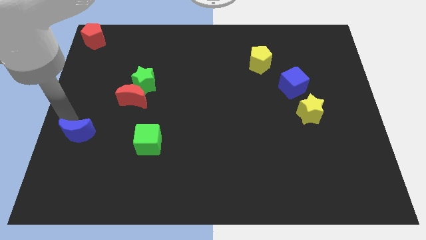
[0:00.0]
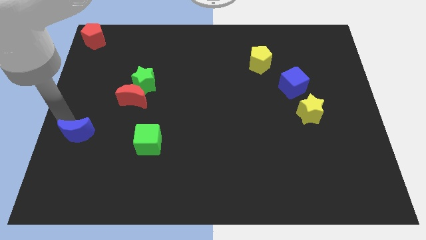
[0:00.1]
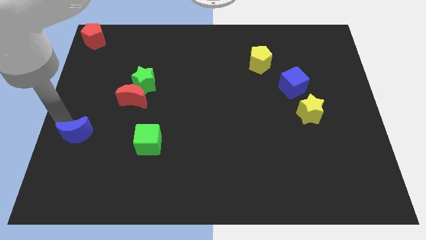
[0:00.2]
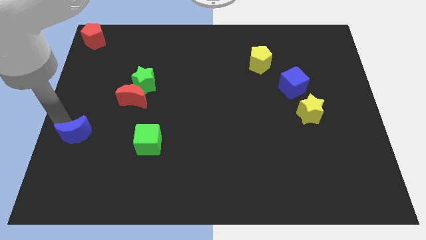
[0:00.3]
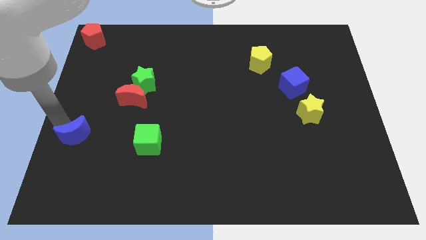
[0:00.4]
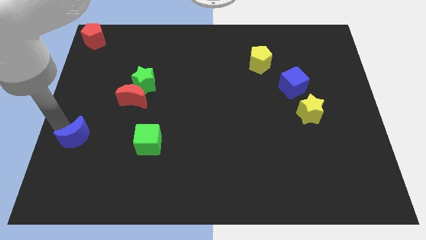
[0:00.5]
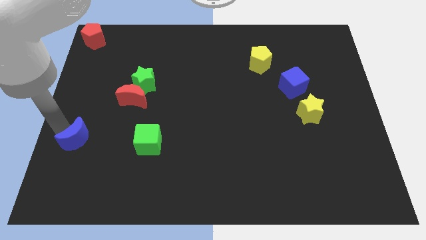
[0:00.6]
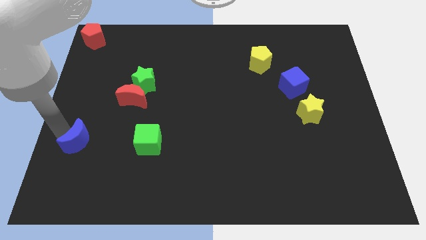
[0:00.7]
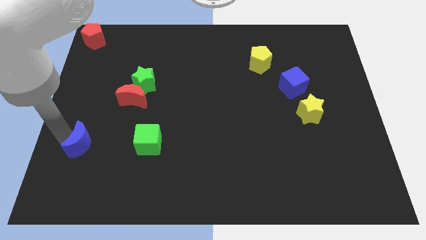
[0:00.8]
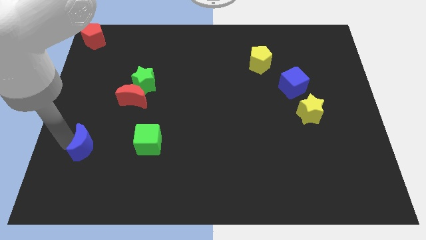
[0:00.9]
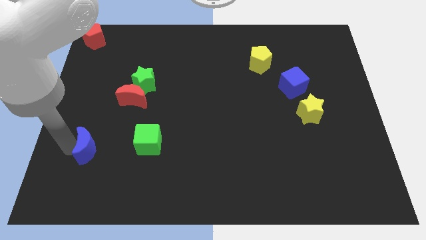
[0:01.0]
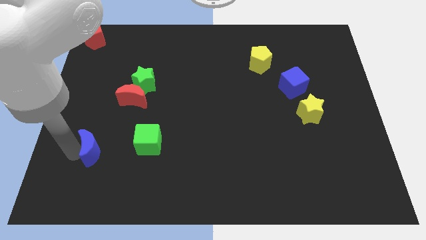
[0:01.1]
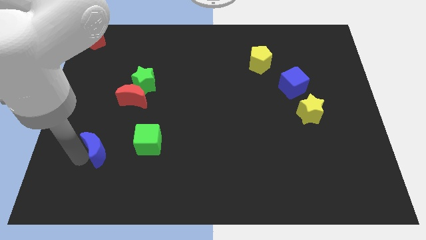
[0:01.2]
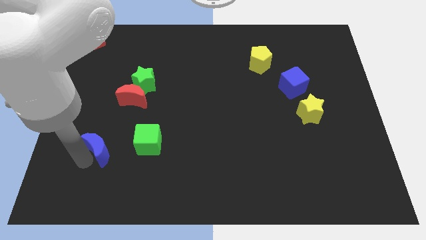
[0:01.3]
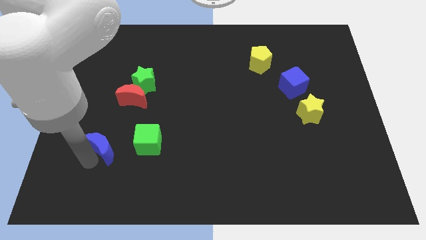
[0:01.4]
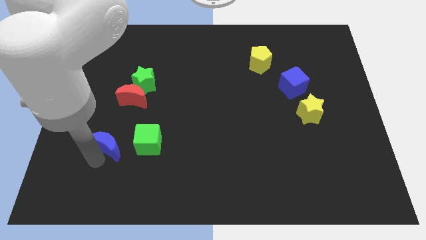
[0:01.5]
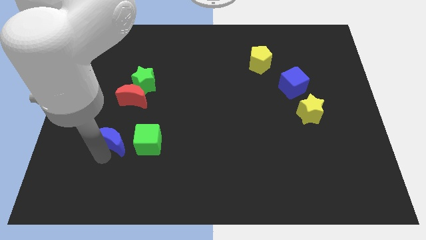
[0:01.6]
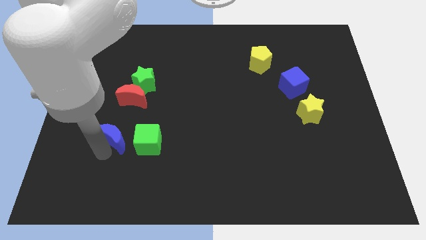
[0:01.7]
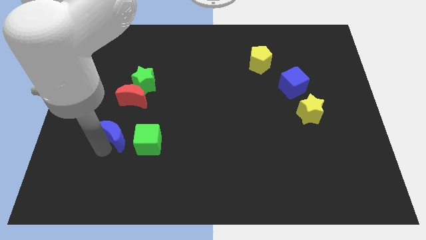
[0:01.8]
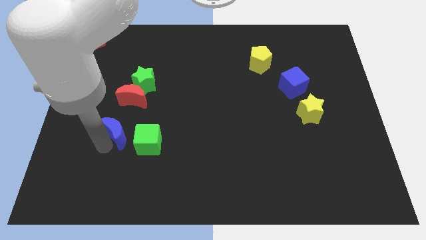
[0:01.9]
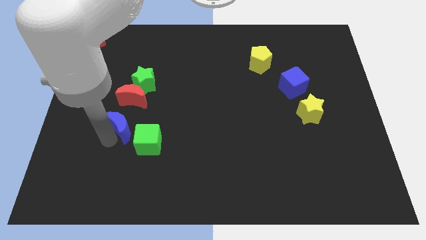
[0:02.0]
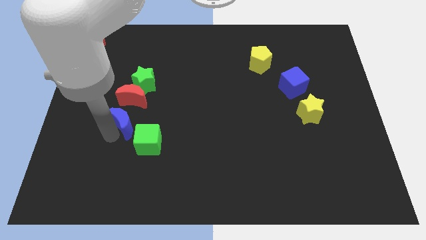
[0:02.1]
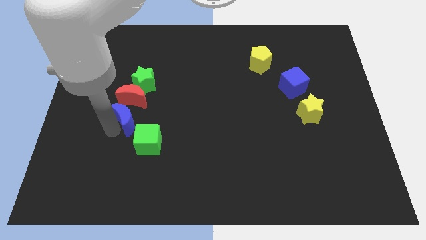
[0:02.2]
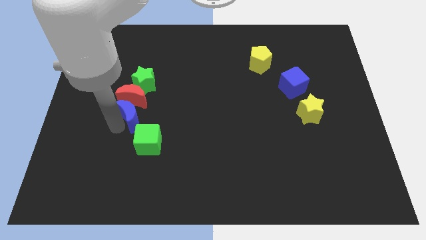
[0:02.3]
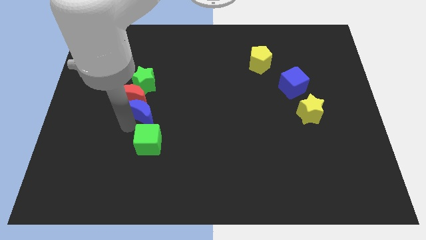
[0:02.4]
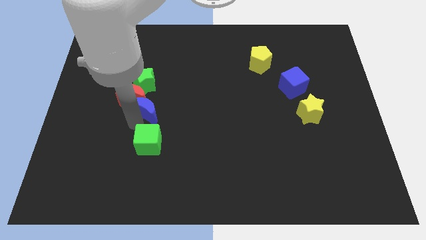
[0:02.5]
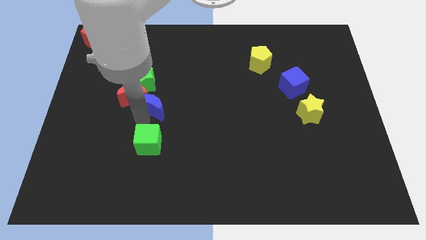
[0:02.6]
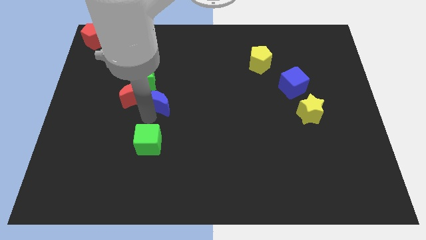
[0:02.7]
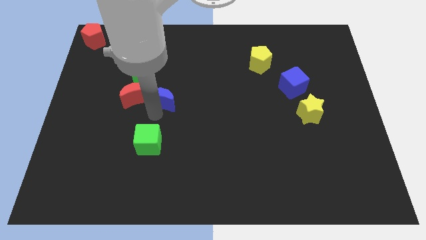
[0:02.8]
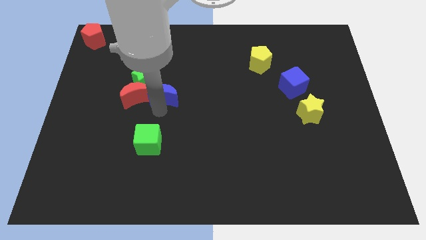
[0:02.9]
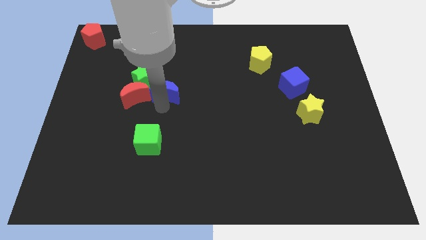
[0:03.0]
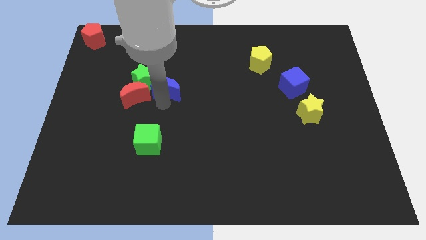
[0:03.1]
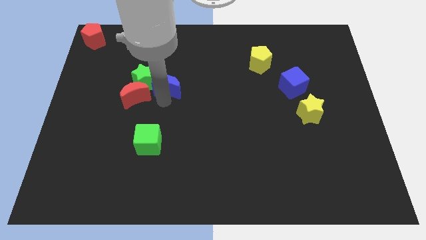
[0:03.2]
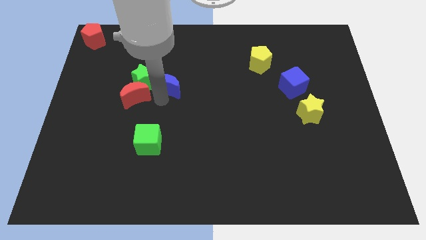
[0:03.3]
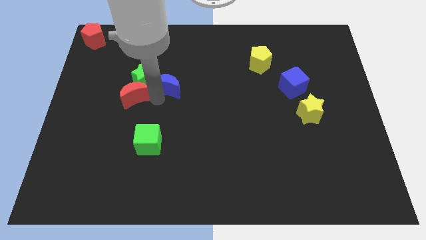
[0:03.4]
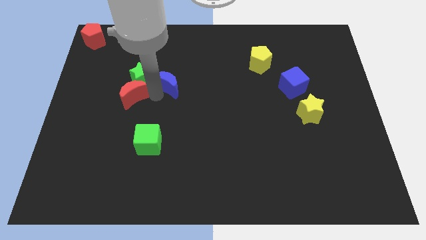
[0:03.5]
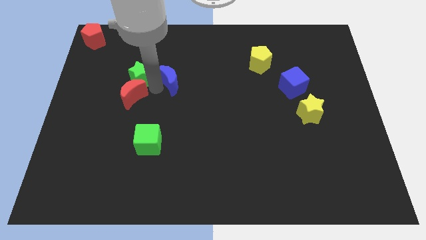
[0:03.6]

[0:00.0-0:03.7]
place the blue moon towards red moon and green star

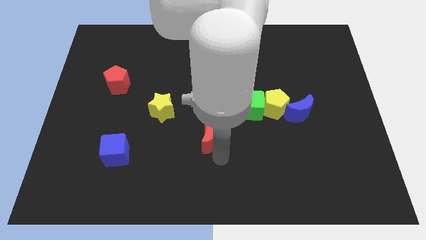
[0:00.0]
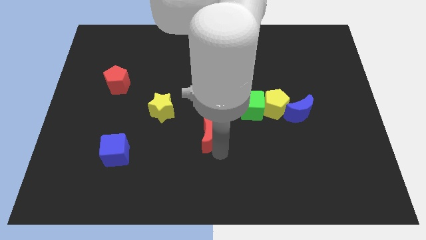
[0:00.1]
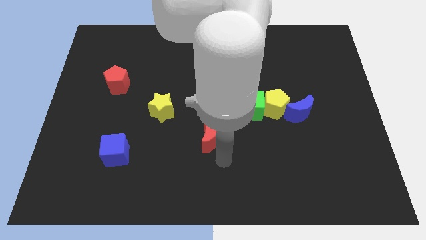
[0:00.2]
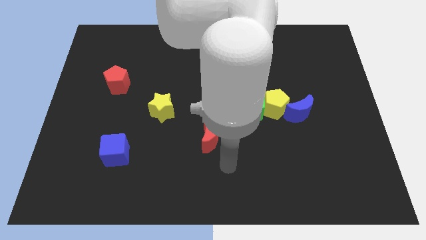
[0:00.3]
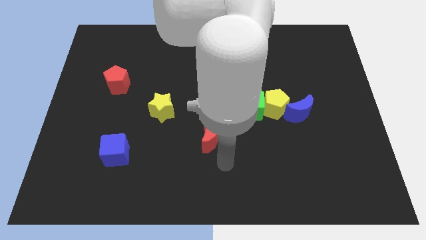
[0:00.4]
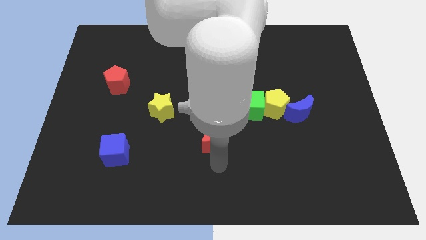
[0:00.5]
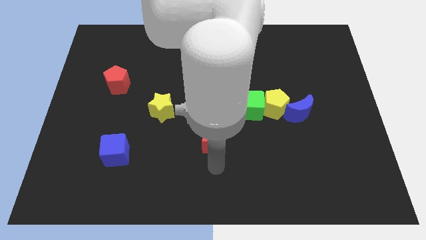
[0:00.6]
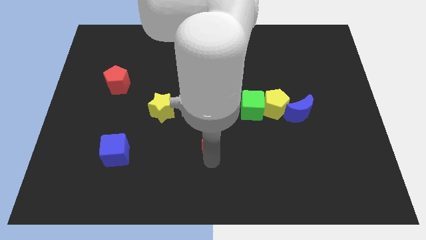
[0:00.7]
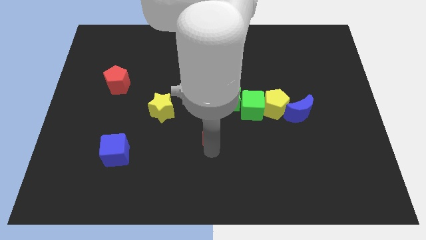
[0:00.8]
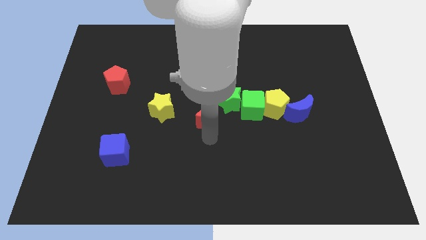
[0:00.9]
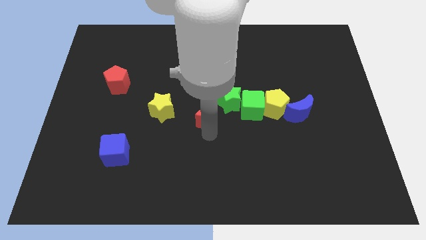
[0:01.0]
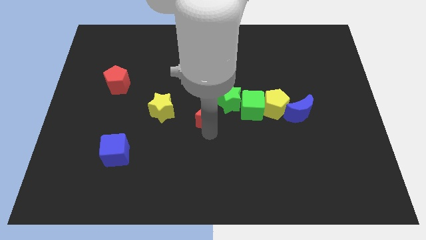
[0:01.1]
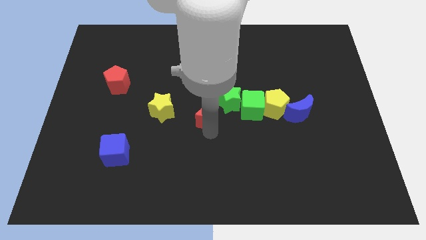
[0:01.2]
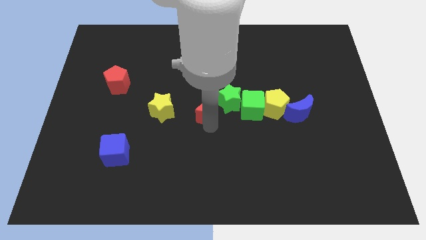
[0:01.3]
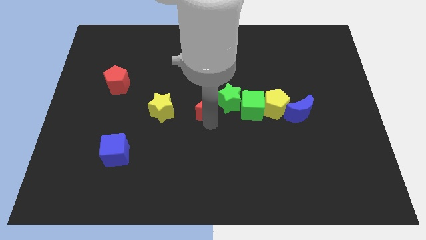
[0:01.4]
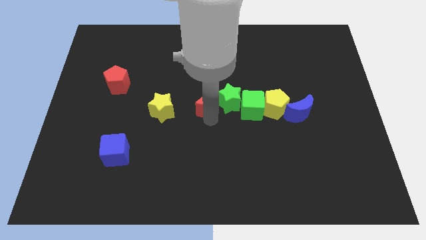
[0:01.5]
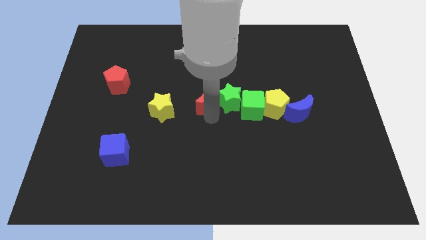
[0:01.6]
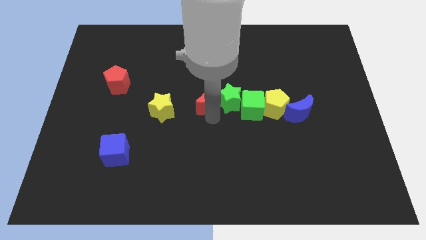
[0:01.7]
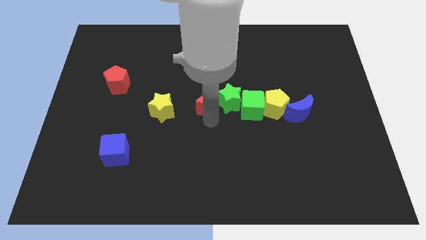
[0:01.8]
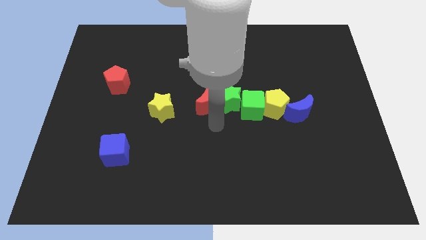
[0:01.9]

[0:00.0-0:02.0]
place the red crescent to the right of the yellow star

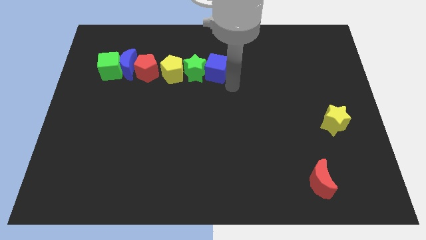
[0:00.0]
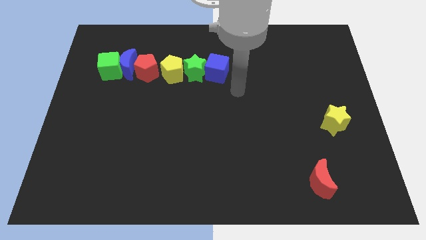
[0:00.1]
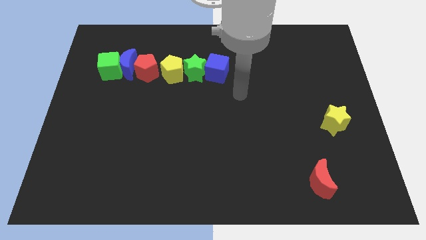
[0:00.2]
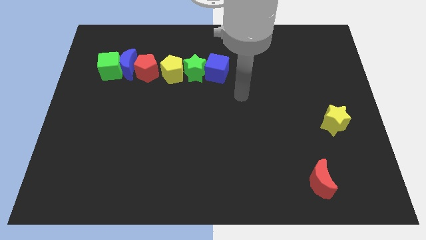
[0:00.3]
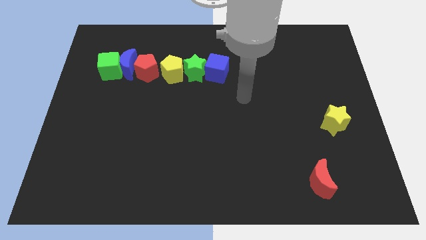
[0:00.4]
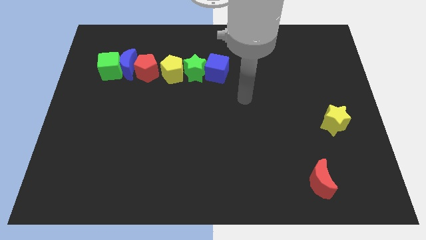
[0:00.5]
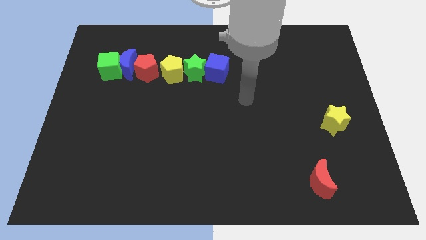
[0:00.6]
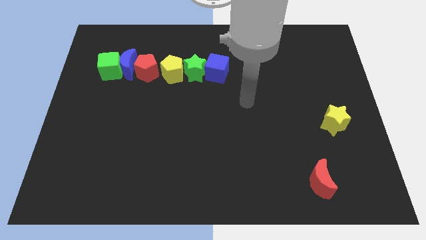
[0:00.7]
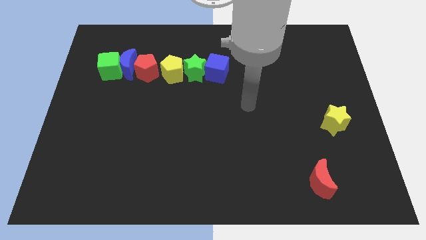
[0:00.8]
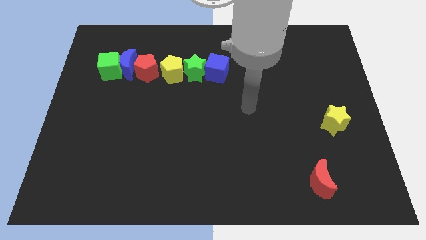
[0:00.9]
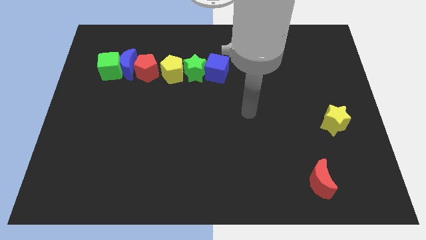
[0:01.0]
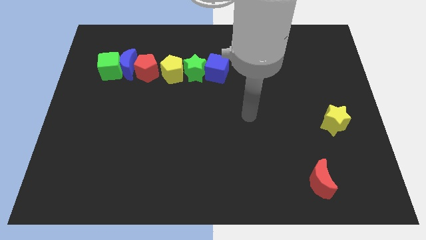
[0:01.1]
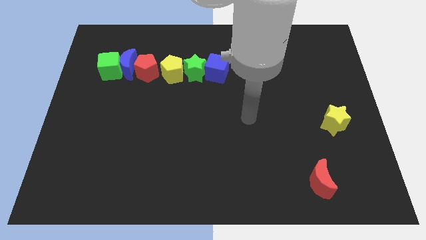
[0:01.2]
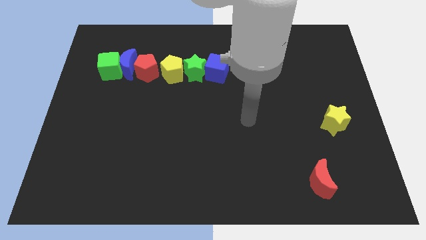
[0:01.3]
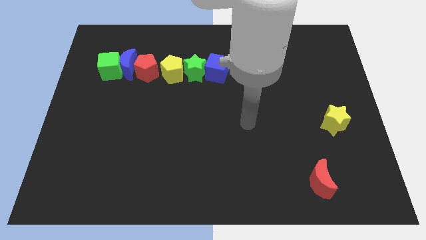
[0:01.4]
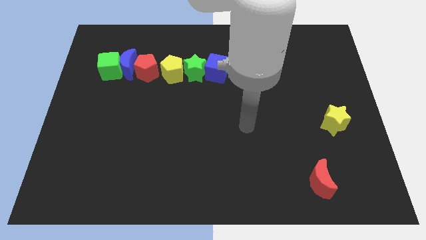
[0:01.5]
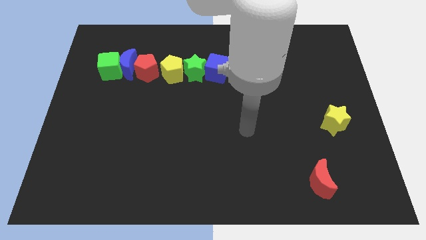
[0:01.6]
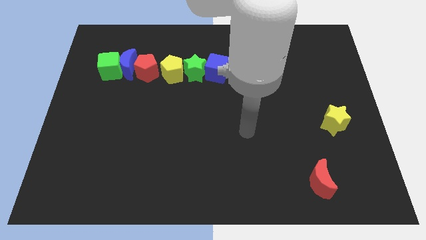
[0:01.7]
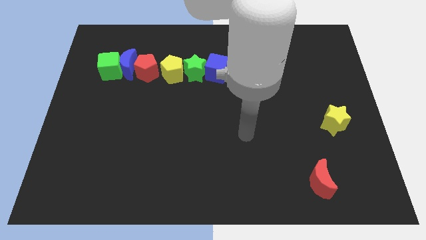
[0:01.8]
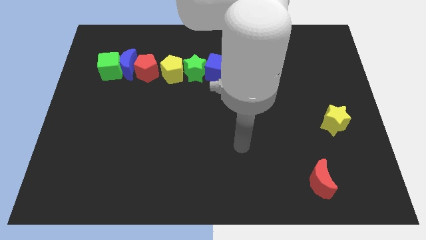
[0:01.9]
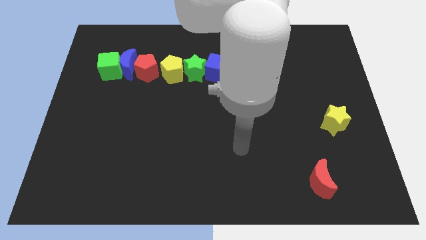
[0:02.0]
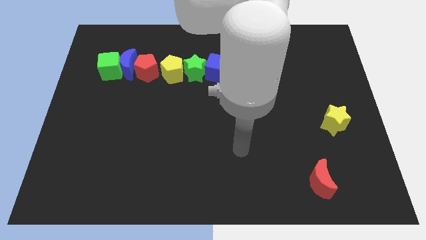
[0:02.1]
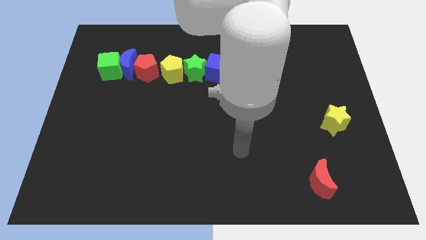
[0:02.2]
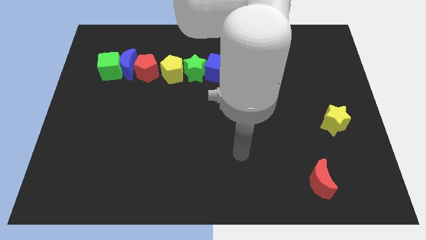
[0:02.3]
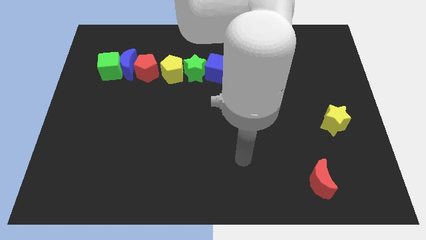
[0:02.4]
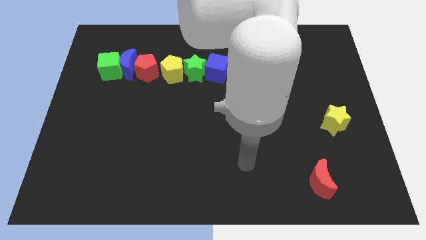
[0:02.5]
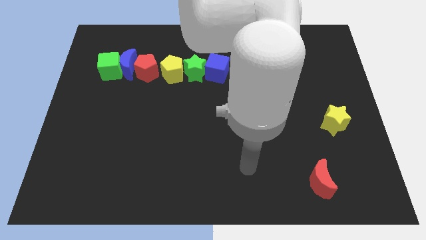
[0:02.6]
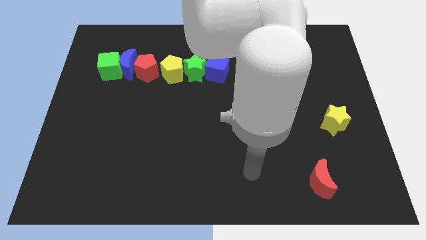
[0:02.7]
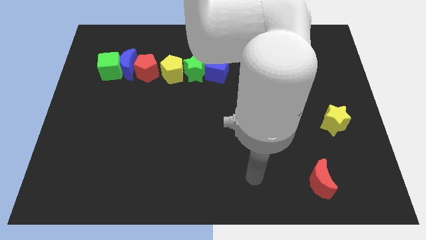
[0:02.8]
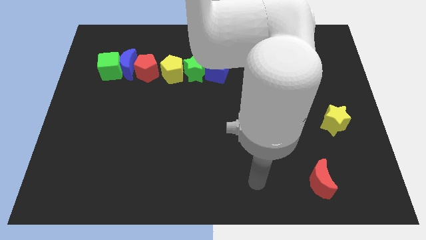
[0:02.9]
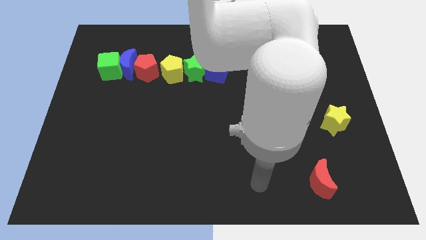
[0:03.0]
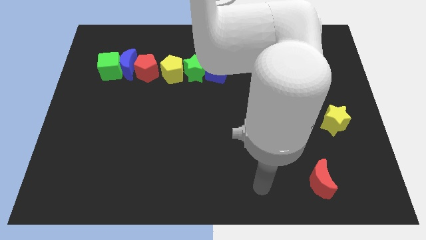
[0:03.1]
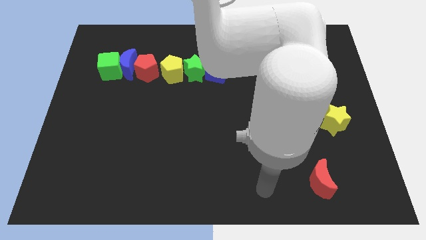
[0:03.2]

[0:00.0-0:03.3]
move your arm to the left of the red crescent
